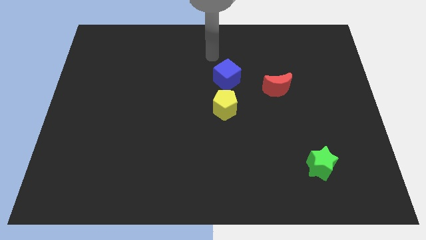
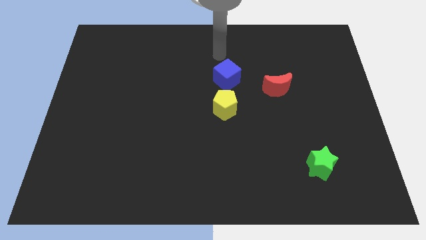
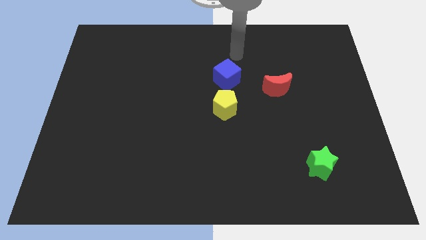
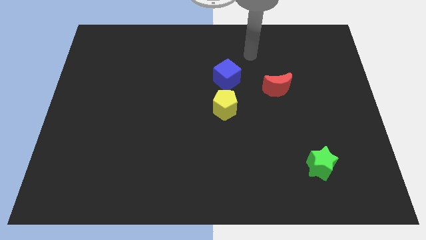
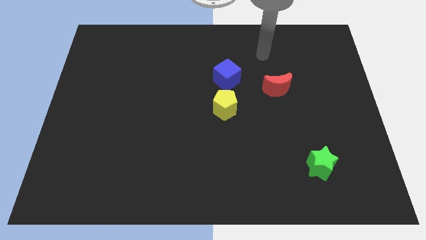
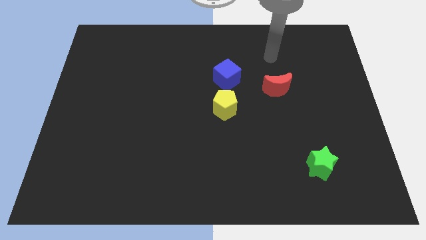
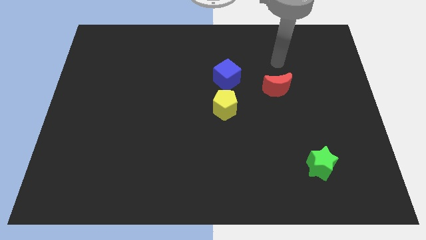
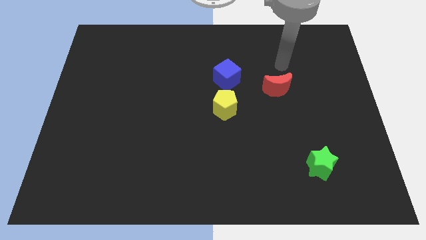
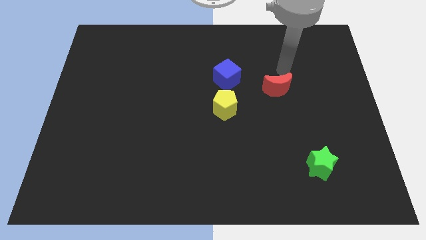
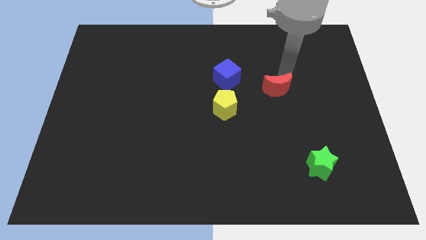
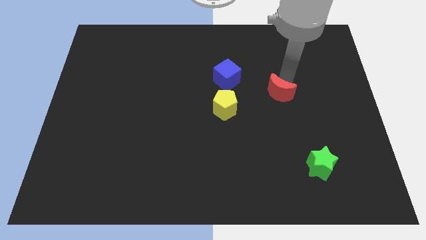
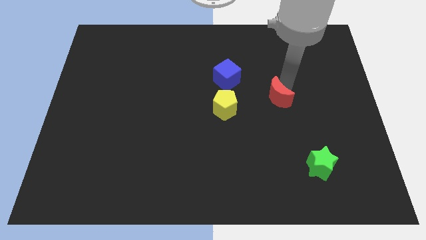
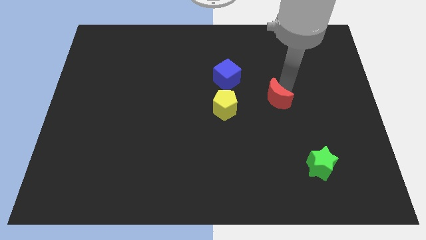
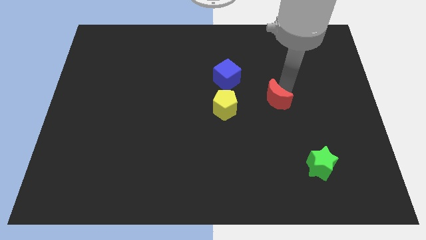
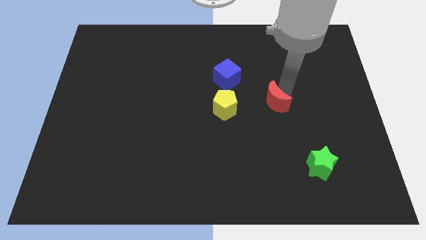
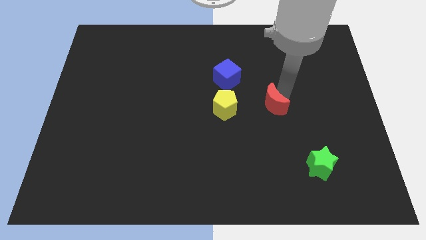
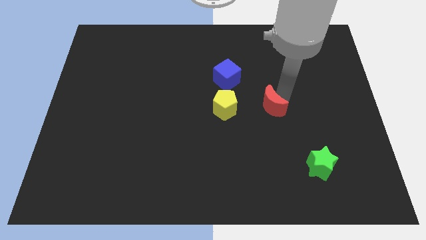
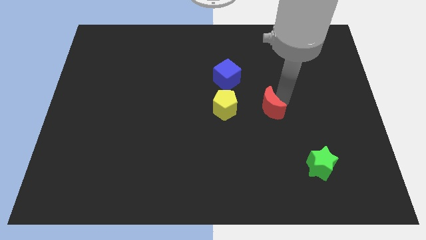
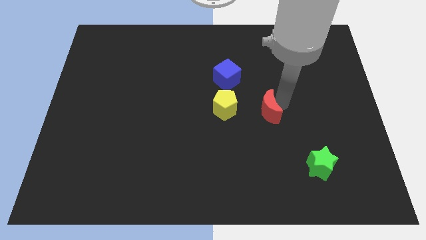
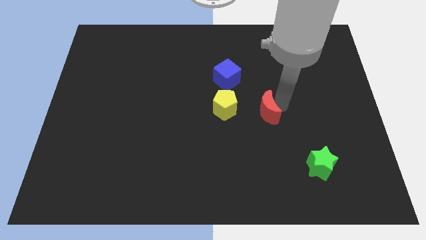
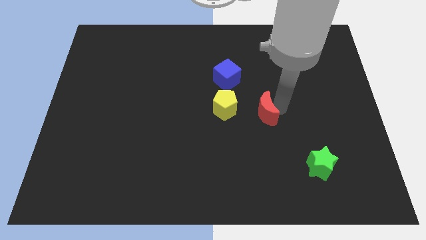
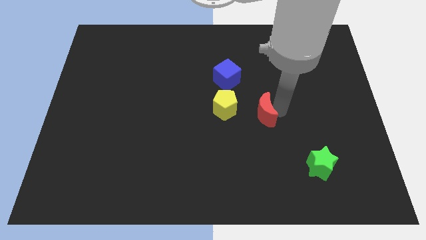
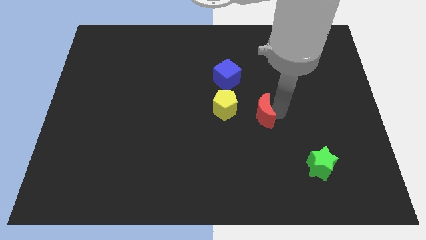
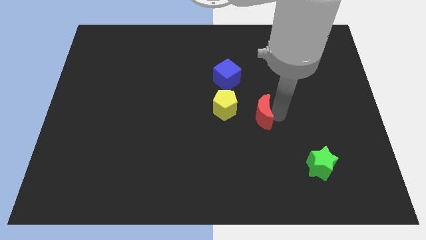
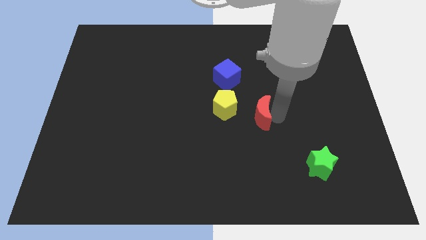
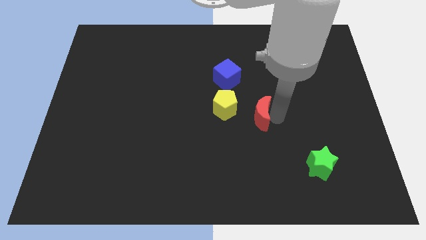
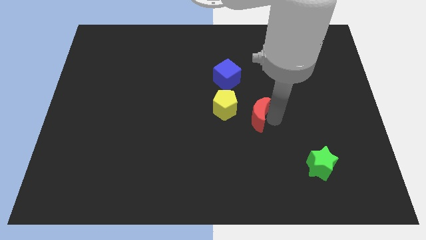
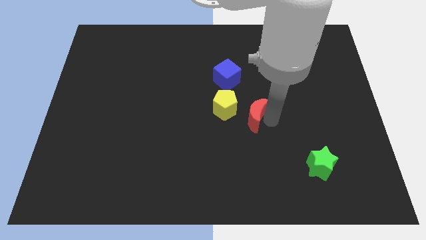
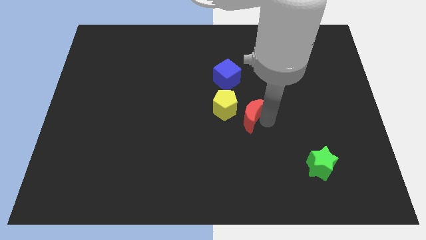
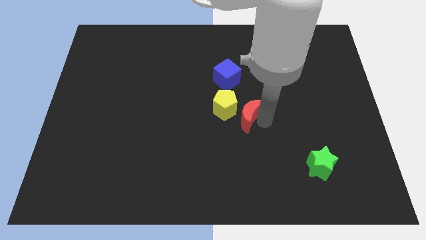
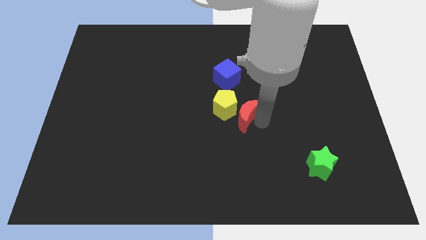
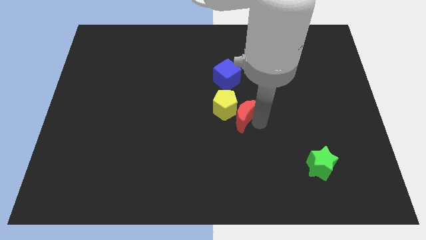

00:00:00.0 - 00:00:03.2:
push the red moon next to the yellow pentagon

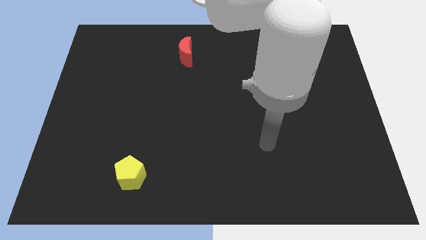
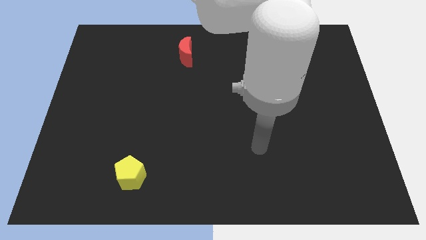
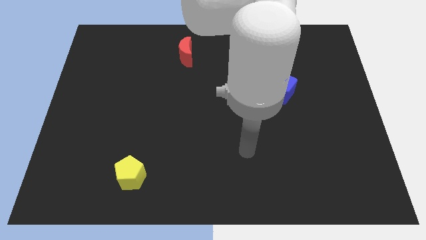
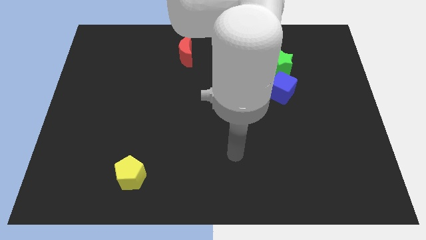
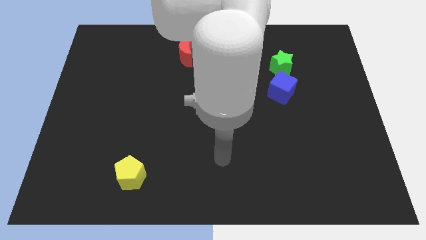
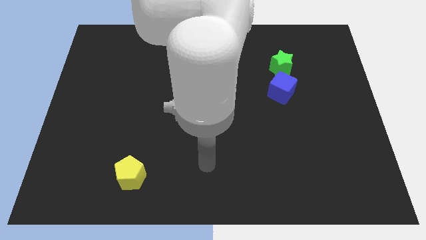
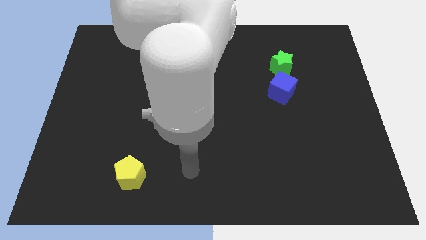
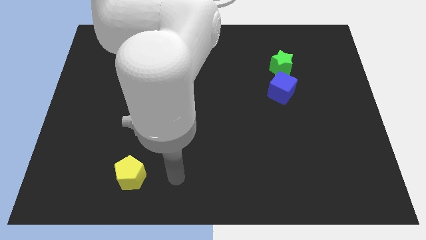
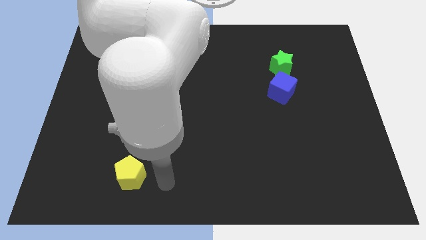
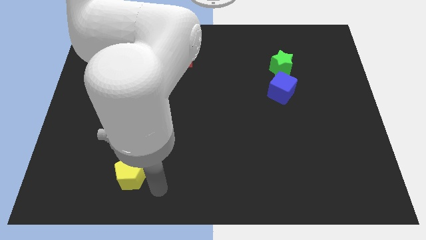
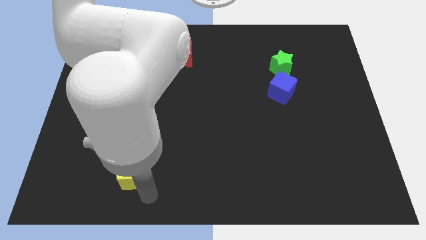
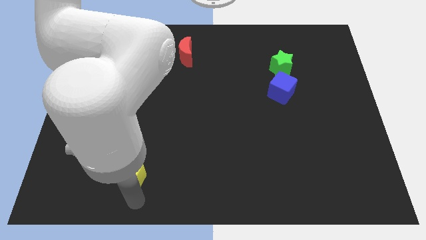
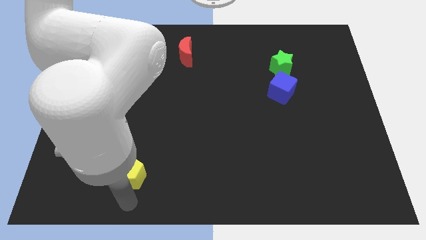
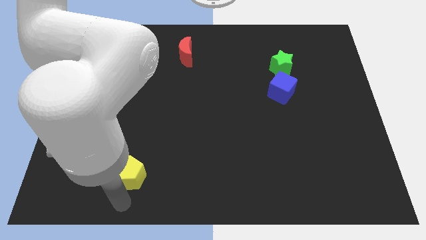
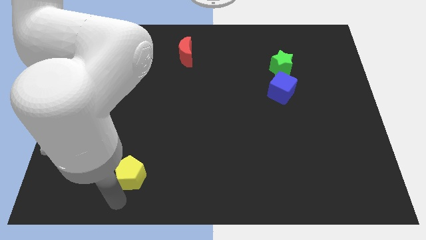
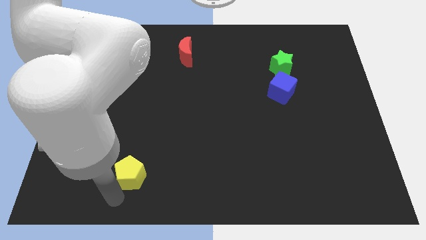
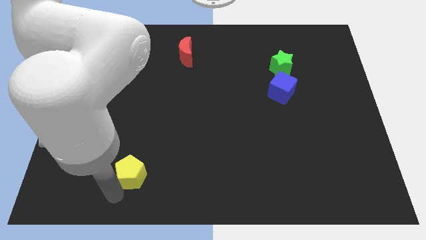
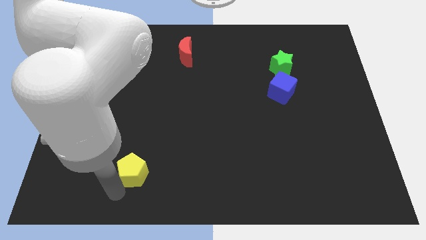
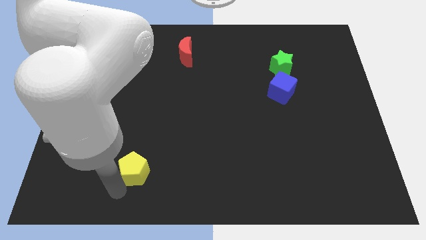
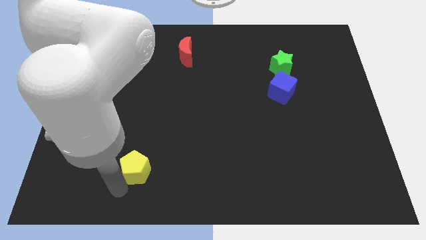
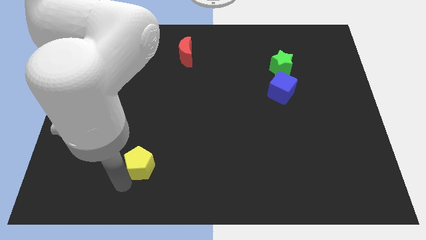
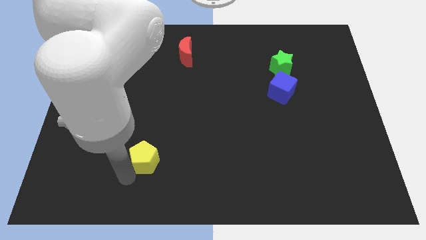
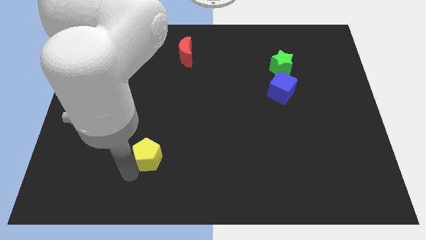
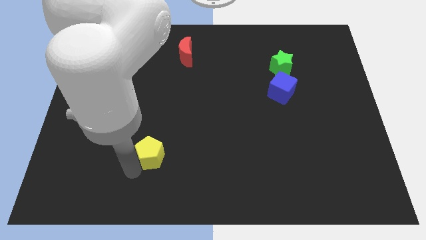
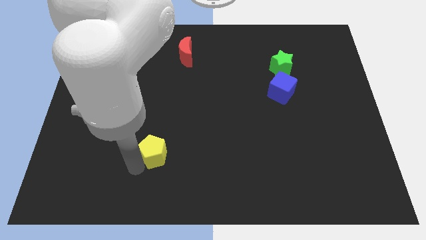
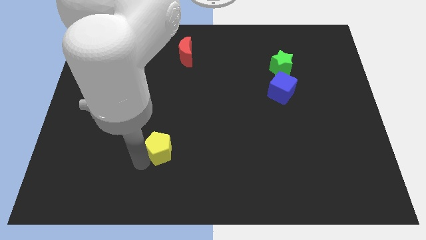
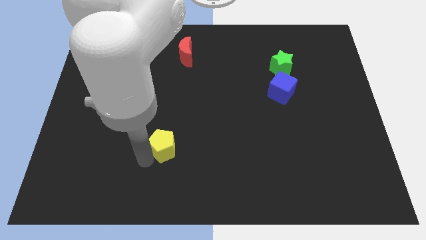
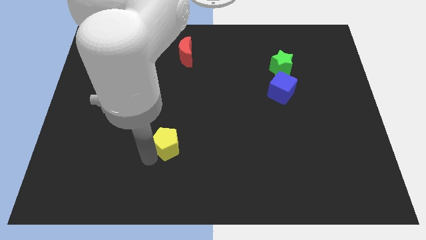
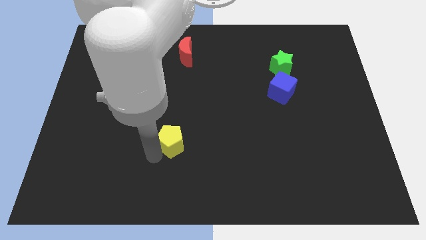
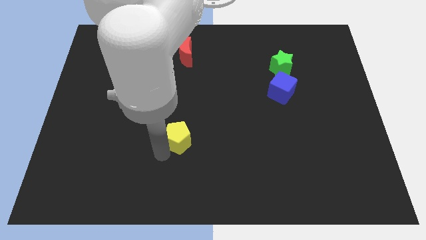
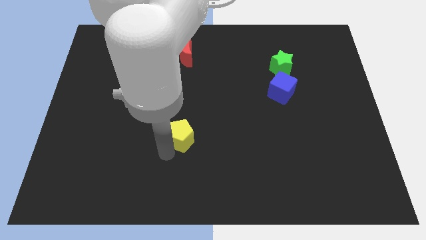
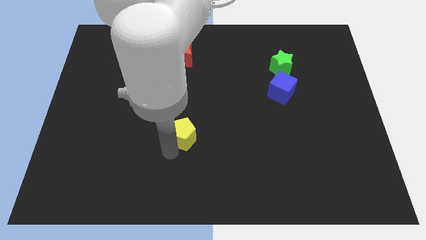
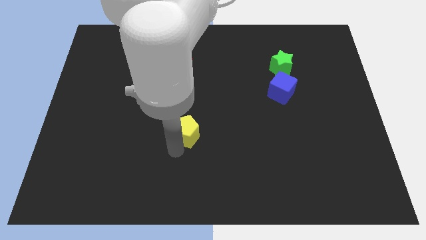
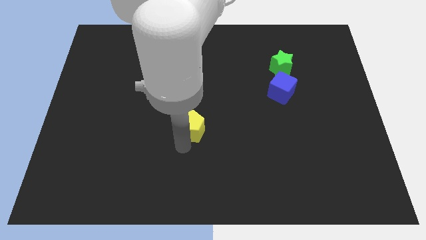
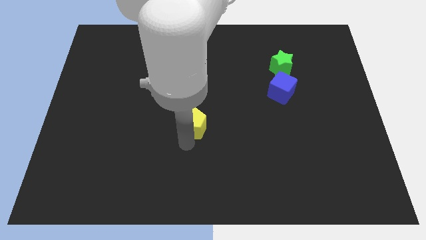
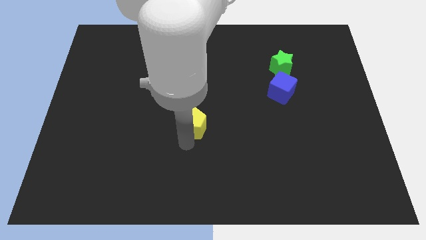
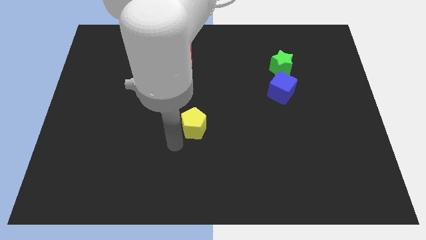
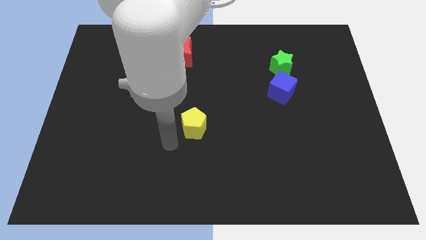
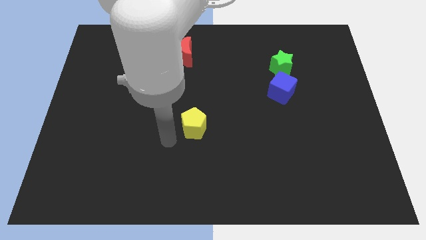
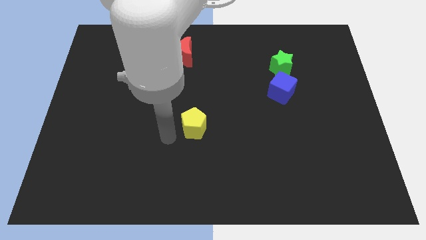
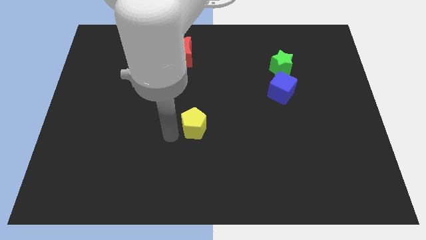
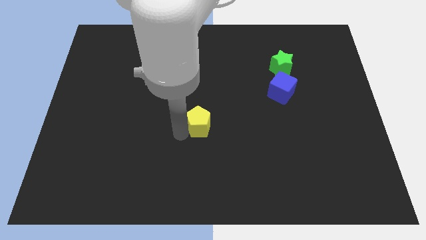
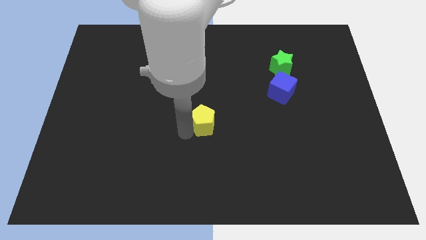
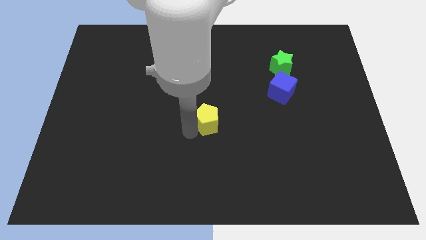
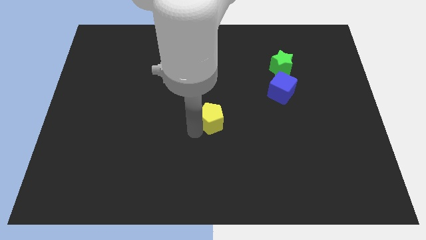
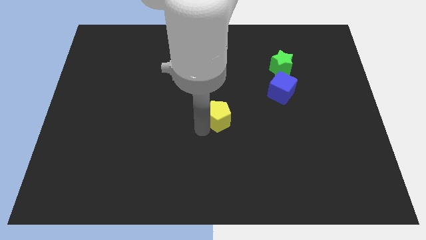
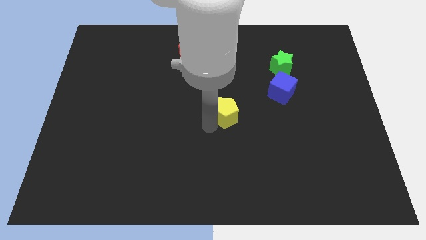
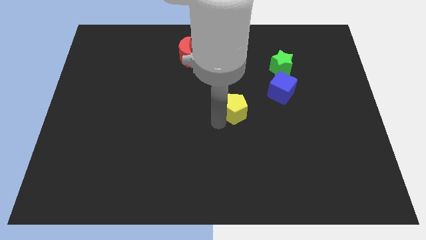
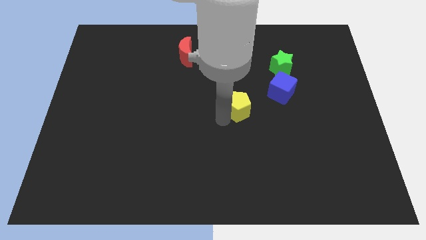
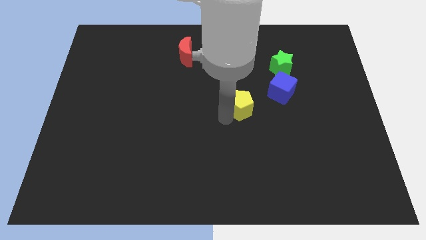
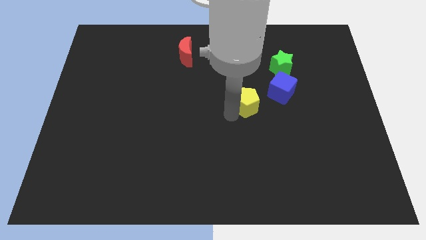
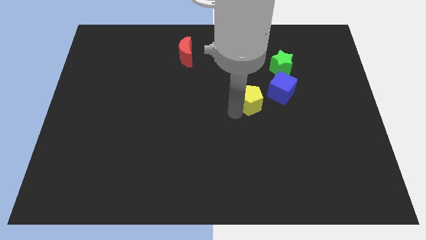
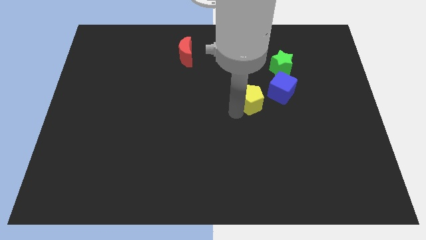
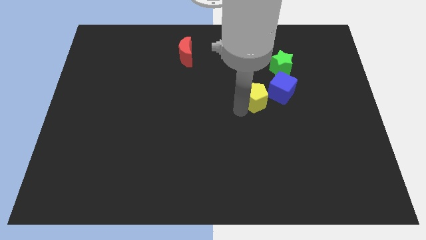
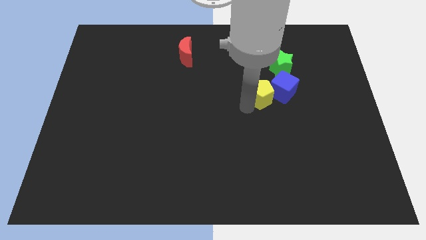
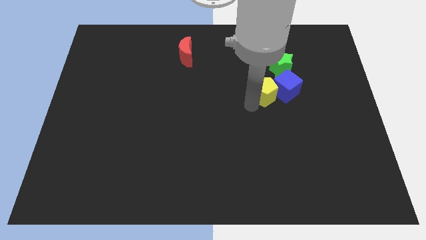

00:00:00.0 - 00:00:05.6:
move the yellow pentagon close to the blue block

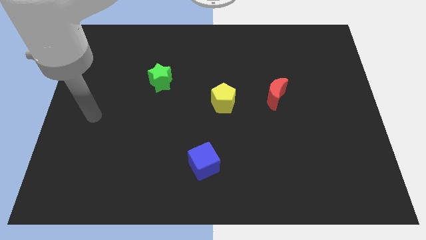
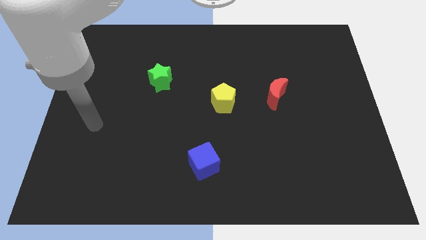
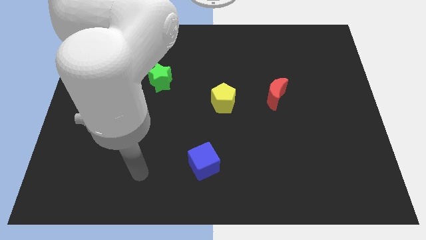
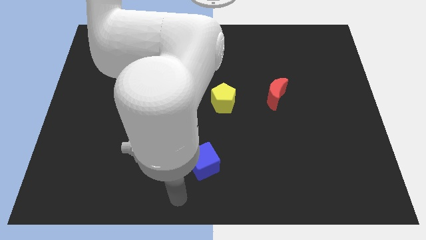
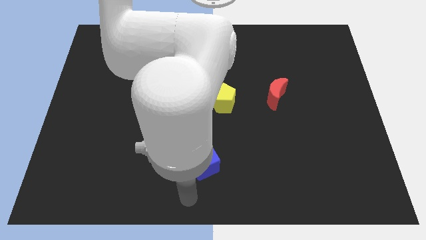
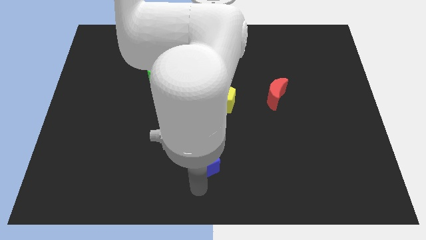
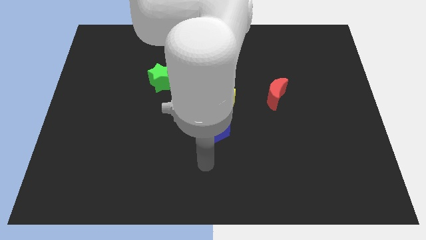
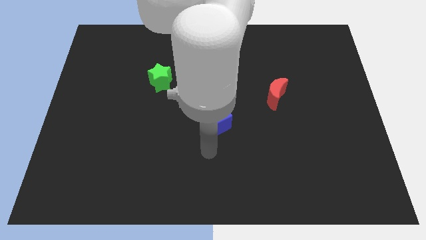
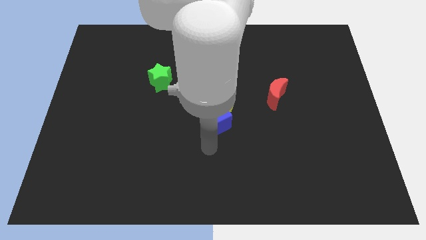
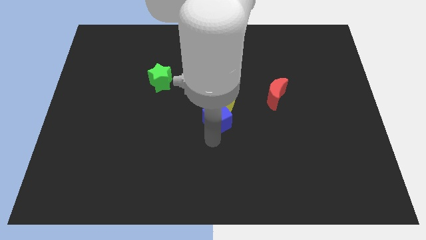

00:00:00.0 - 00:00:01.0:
slide the blue cube towards the yellow pentagon
